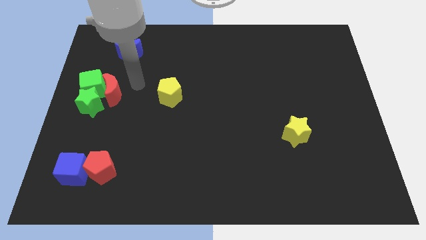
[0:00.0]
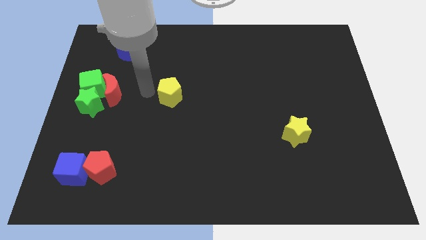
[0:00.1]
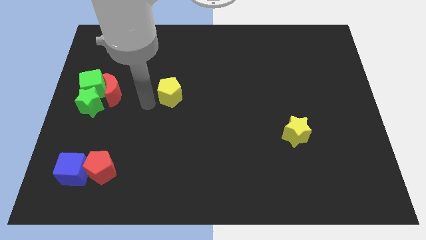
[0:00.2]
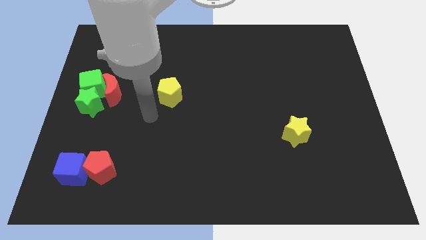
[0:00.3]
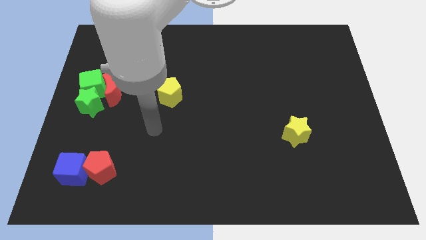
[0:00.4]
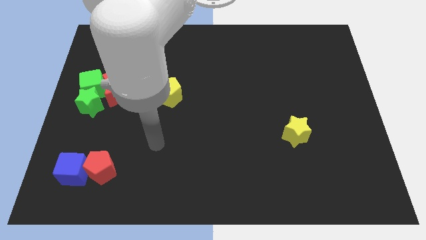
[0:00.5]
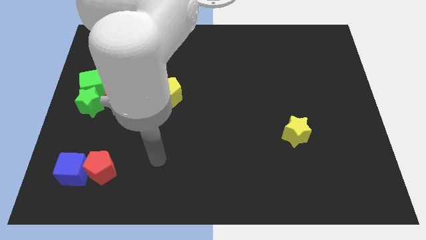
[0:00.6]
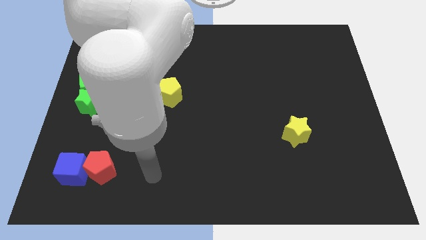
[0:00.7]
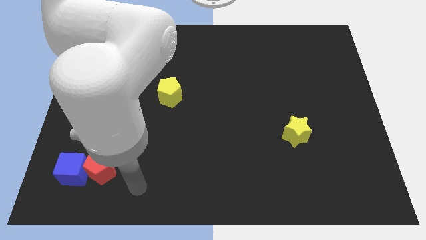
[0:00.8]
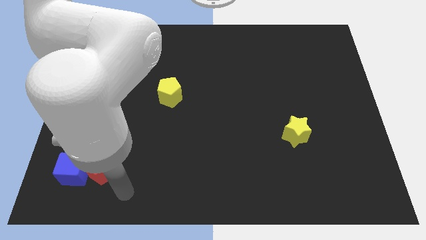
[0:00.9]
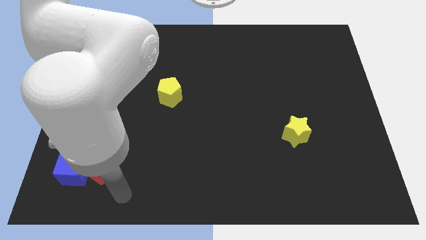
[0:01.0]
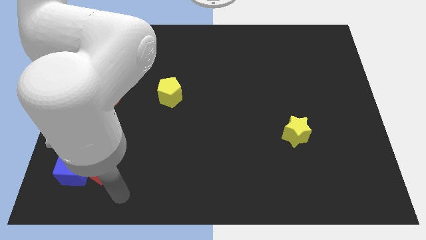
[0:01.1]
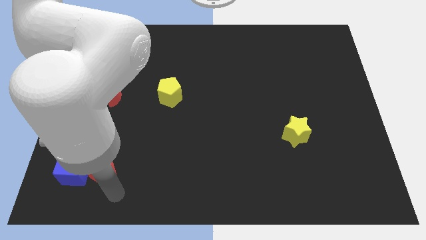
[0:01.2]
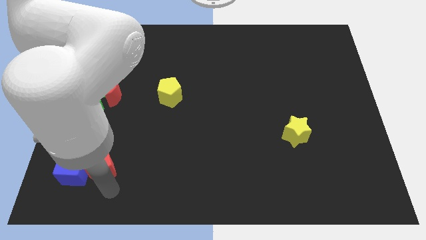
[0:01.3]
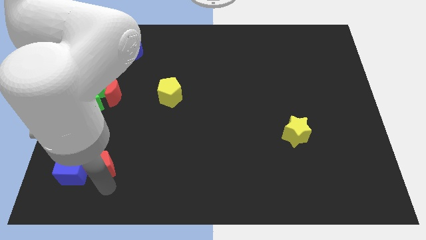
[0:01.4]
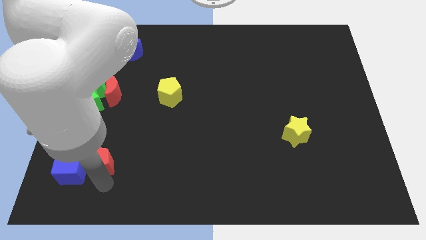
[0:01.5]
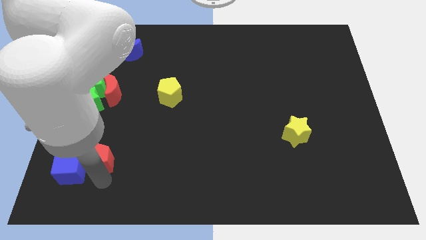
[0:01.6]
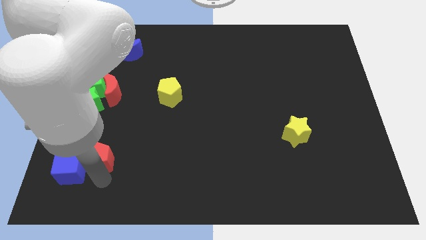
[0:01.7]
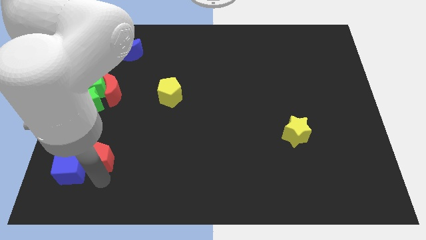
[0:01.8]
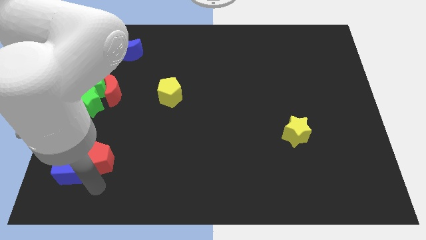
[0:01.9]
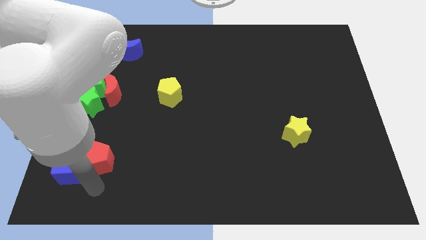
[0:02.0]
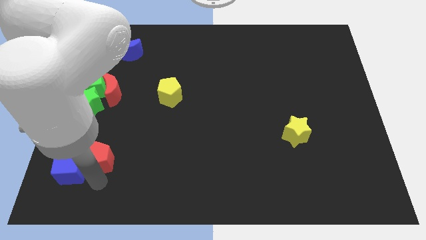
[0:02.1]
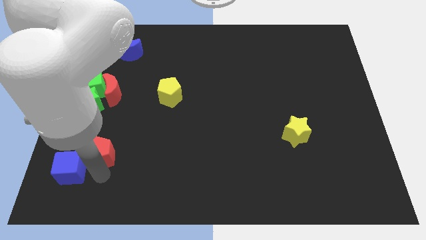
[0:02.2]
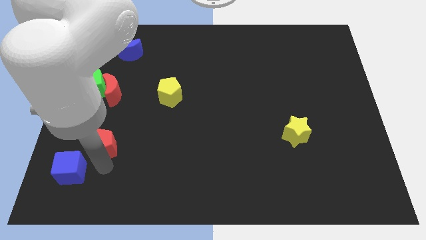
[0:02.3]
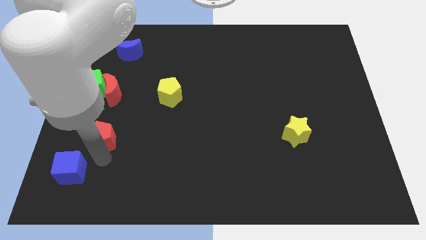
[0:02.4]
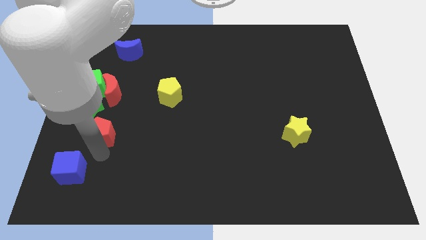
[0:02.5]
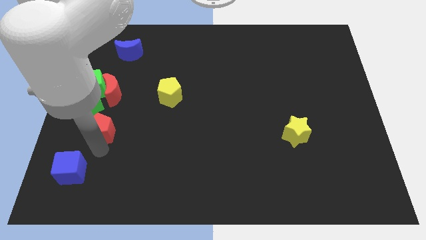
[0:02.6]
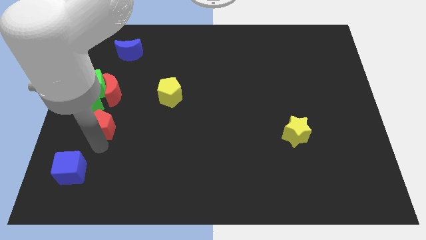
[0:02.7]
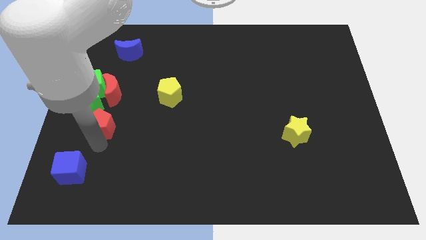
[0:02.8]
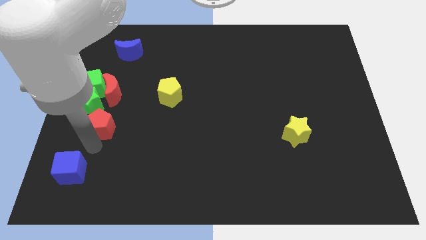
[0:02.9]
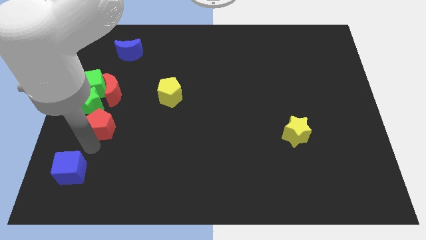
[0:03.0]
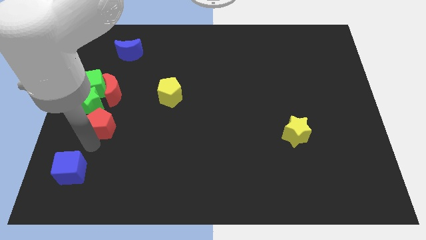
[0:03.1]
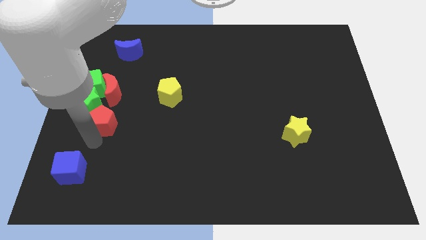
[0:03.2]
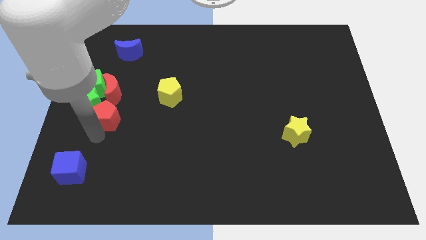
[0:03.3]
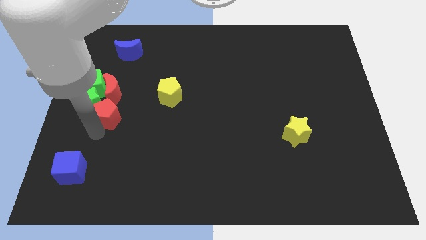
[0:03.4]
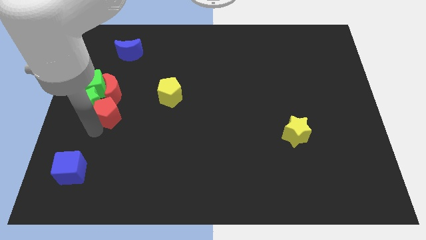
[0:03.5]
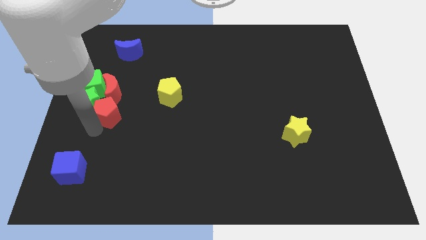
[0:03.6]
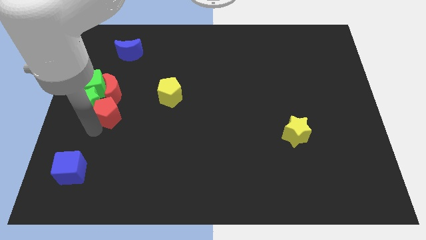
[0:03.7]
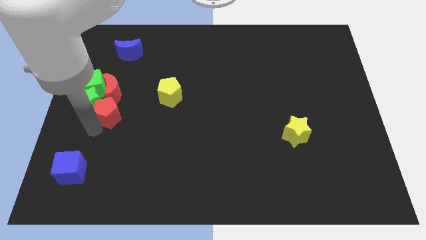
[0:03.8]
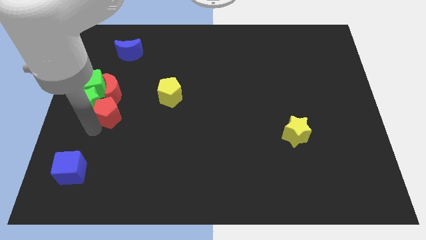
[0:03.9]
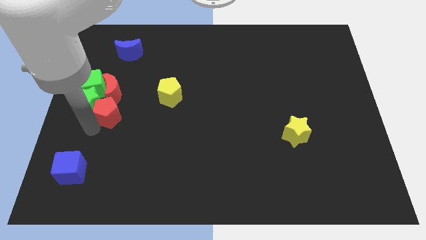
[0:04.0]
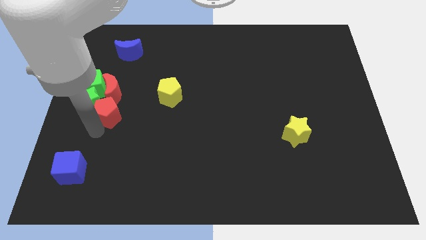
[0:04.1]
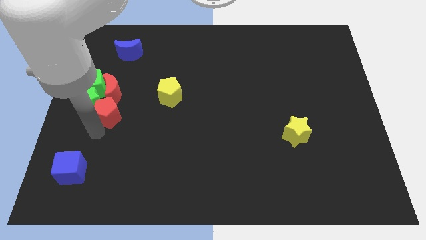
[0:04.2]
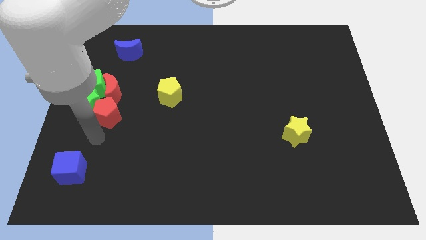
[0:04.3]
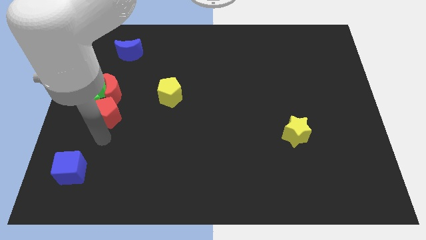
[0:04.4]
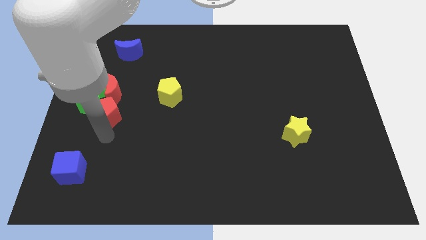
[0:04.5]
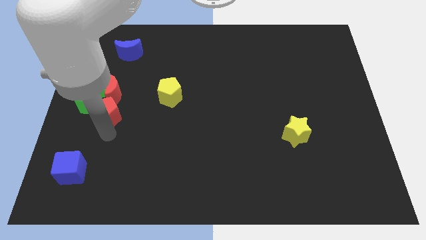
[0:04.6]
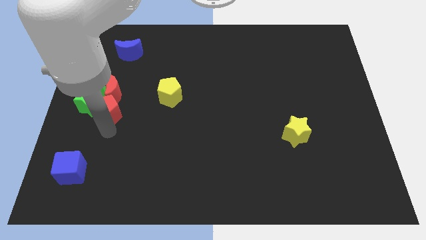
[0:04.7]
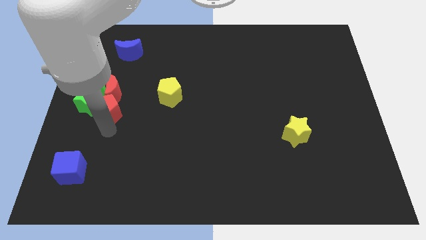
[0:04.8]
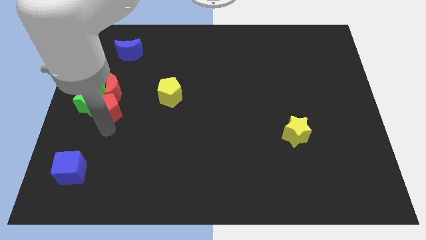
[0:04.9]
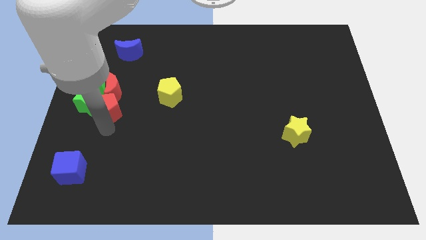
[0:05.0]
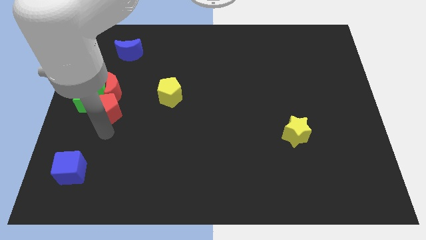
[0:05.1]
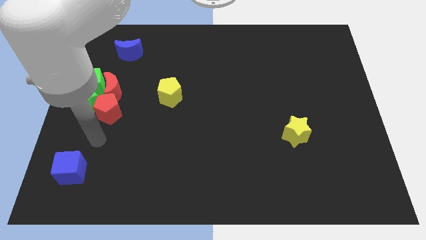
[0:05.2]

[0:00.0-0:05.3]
push the red pentagon into the red crescent

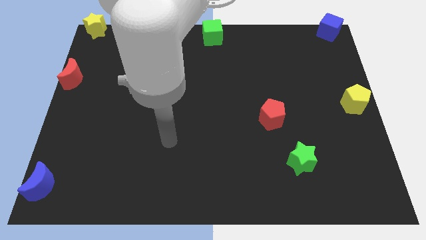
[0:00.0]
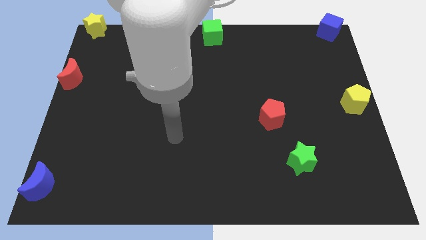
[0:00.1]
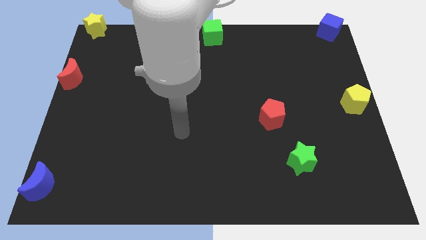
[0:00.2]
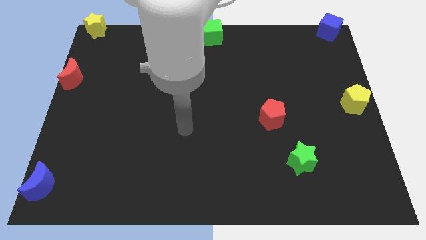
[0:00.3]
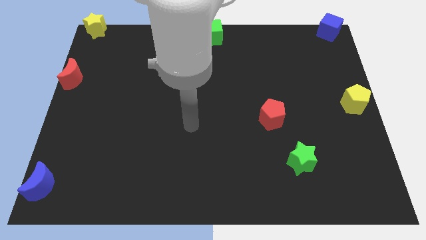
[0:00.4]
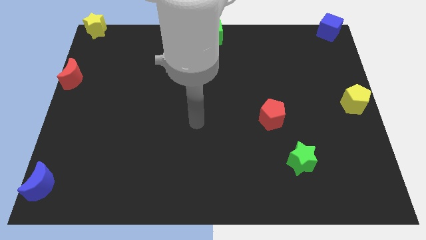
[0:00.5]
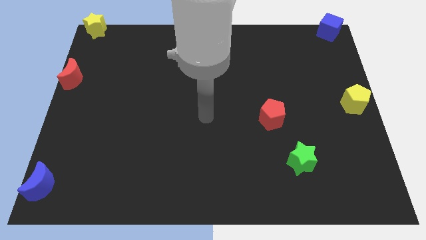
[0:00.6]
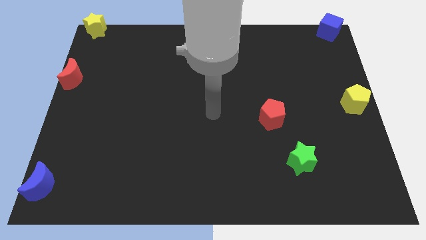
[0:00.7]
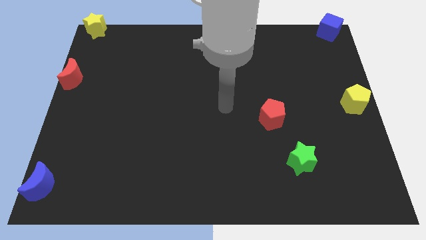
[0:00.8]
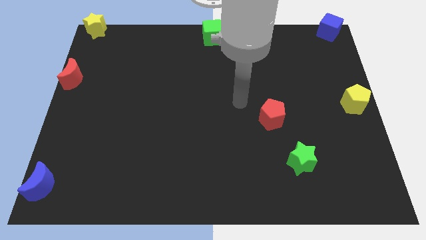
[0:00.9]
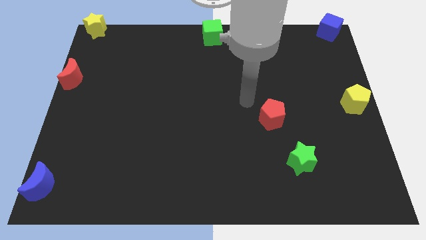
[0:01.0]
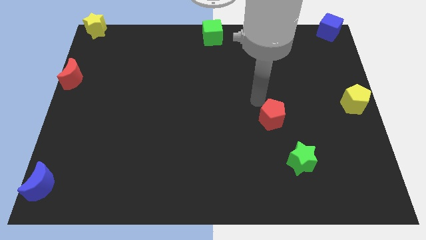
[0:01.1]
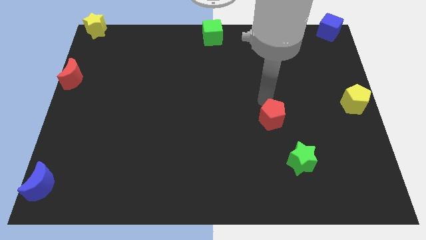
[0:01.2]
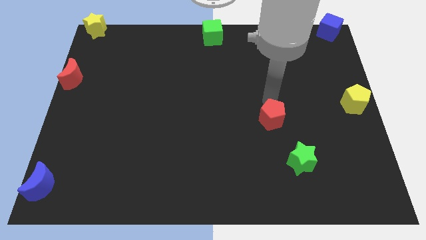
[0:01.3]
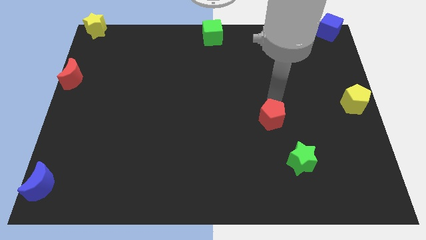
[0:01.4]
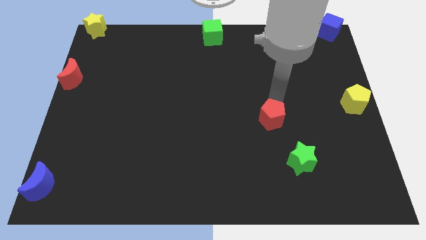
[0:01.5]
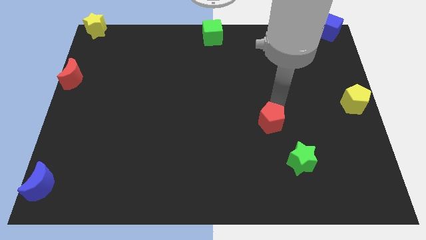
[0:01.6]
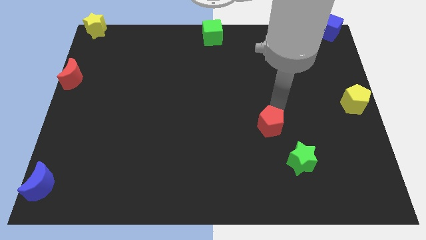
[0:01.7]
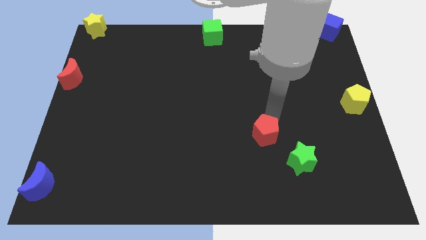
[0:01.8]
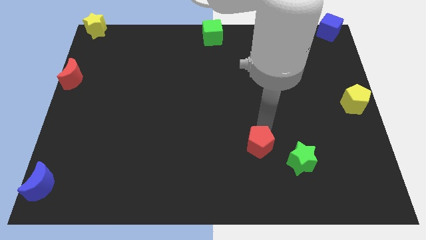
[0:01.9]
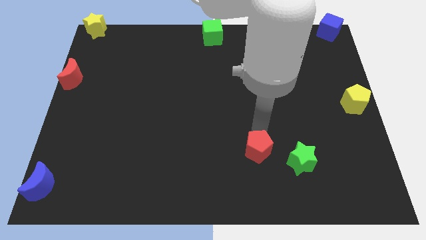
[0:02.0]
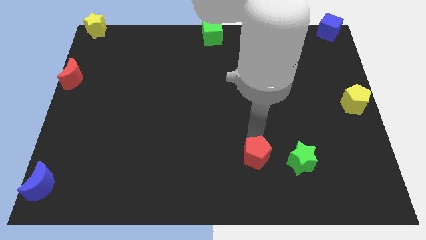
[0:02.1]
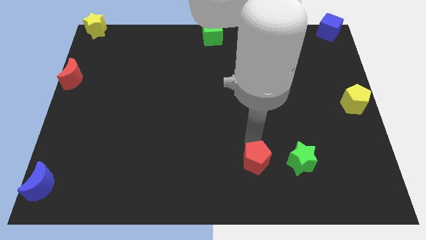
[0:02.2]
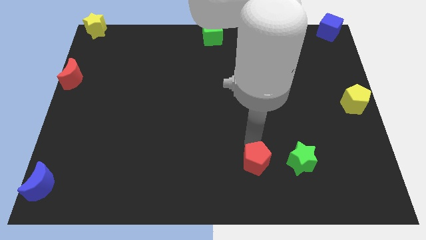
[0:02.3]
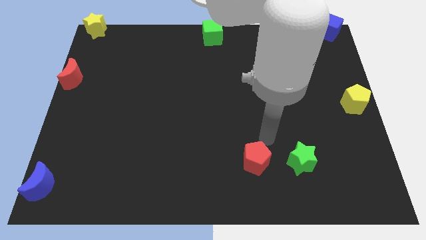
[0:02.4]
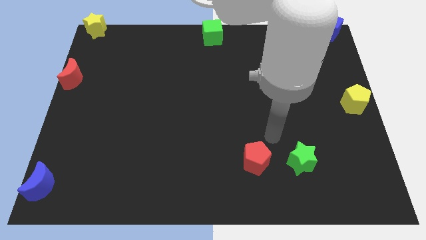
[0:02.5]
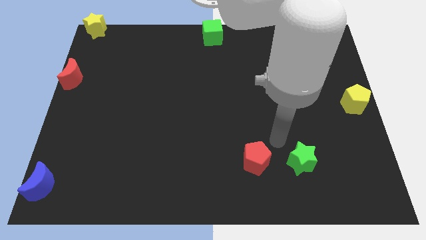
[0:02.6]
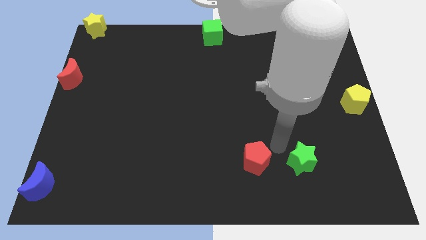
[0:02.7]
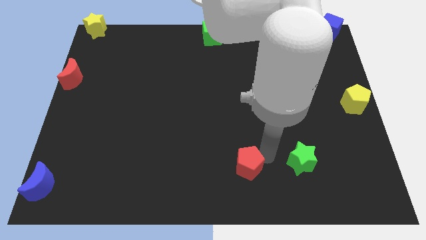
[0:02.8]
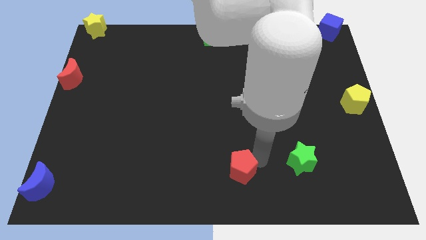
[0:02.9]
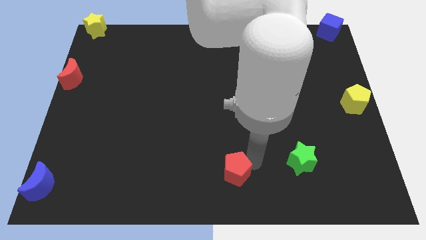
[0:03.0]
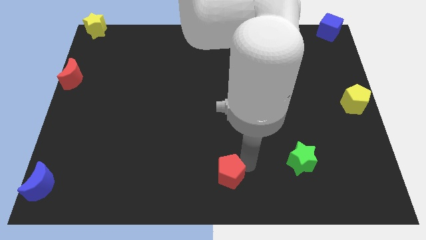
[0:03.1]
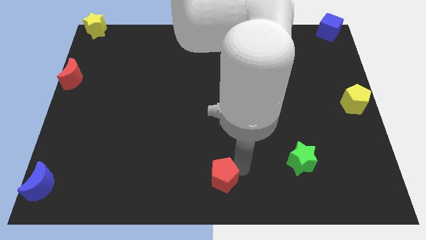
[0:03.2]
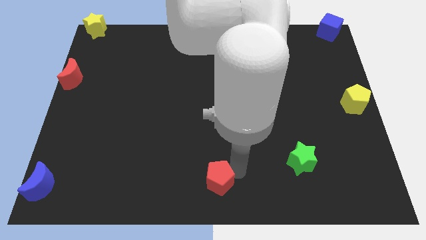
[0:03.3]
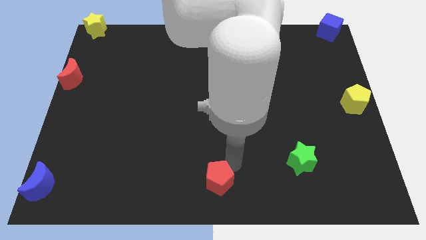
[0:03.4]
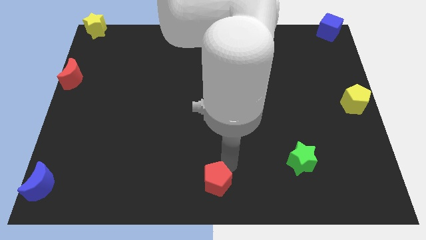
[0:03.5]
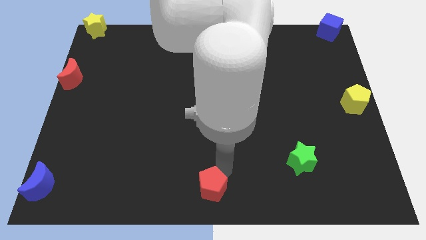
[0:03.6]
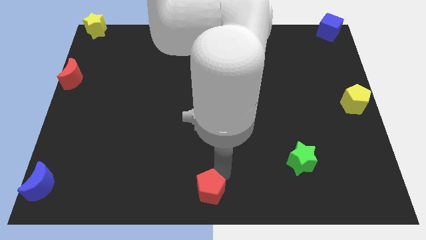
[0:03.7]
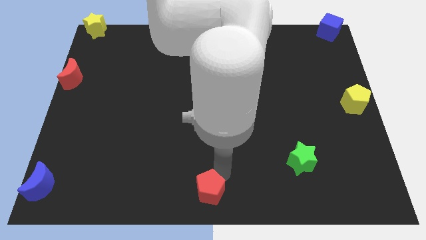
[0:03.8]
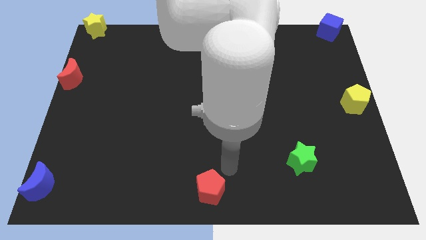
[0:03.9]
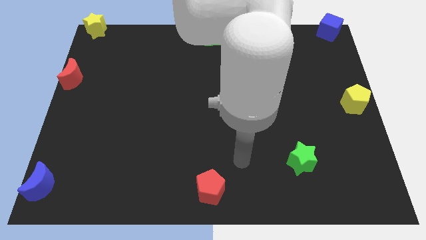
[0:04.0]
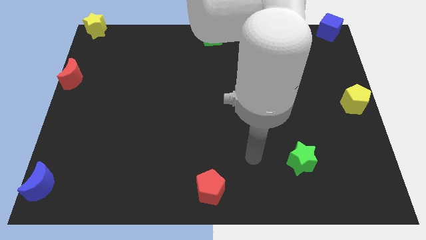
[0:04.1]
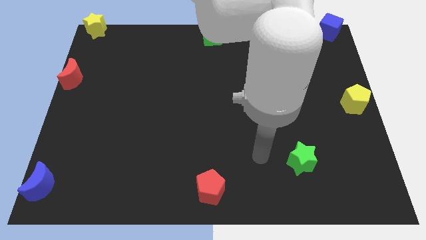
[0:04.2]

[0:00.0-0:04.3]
place the red pentagon at the bottom center of the board
